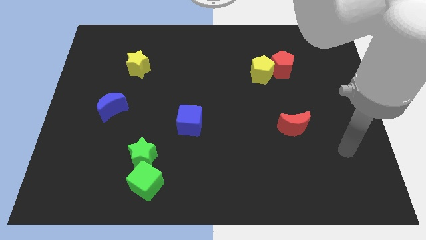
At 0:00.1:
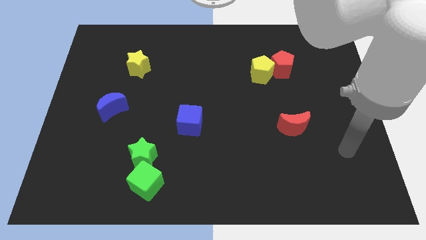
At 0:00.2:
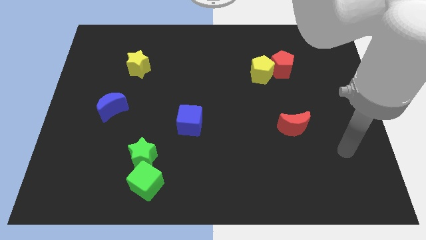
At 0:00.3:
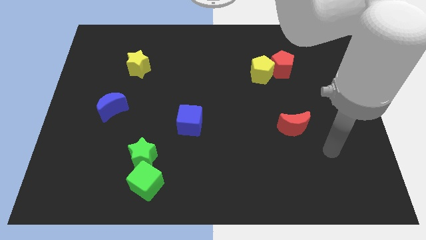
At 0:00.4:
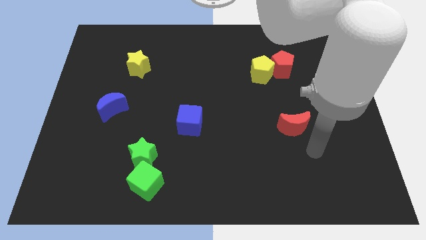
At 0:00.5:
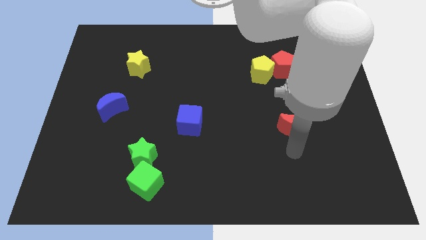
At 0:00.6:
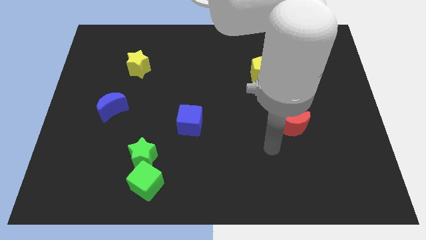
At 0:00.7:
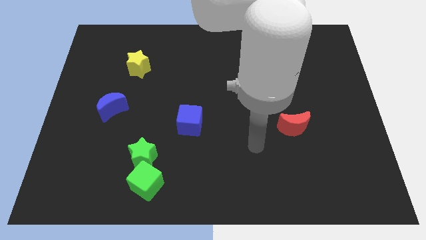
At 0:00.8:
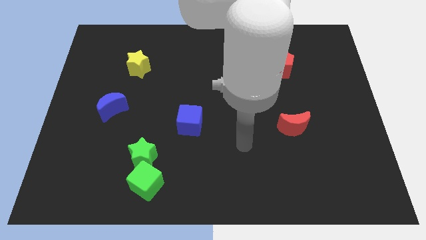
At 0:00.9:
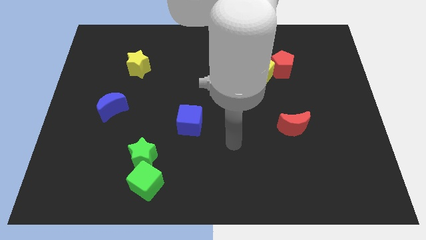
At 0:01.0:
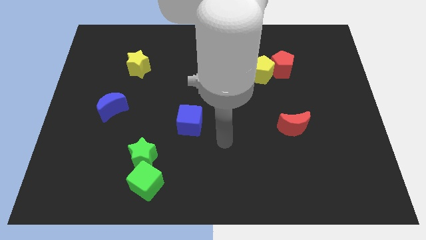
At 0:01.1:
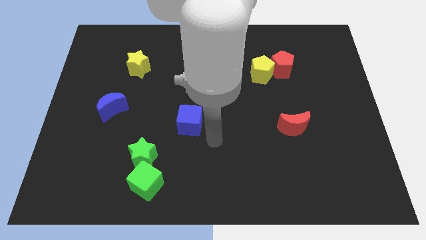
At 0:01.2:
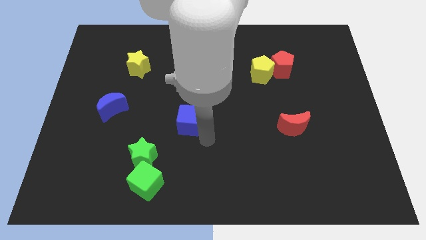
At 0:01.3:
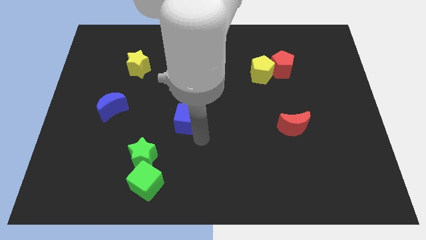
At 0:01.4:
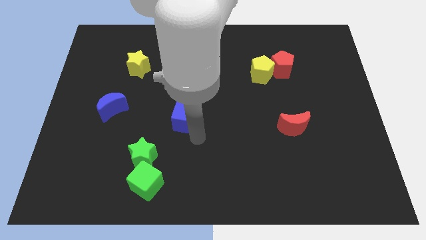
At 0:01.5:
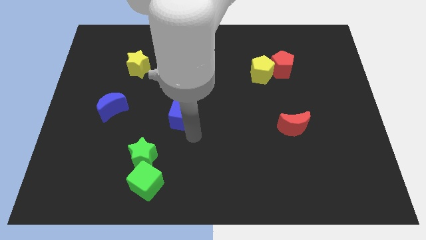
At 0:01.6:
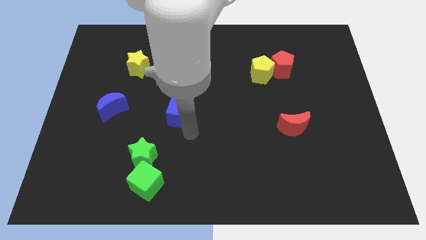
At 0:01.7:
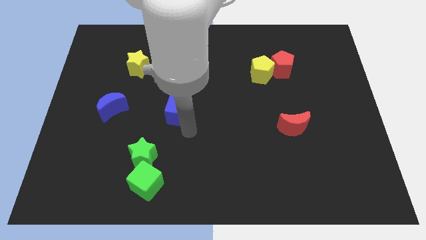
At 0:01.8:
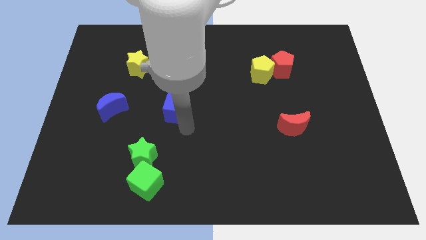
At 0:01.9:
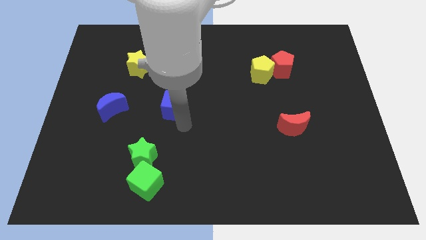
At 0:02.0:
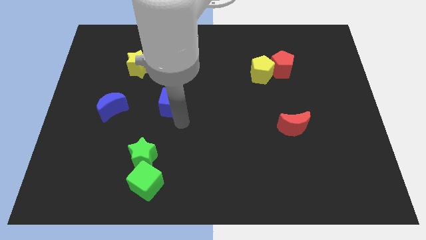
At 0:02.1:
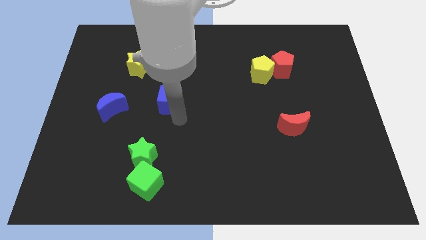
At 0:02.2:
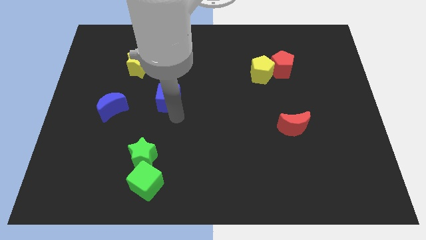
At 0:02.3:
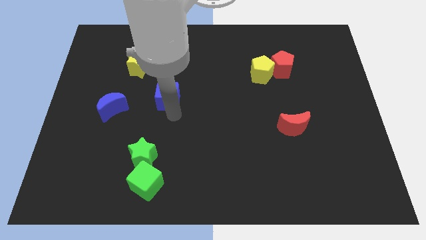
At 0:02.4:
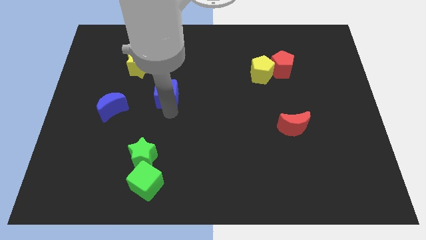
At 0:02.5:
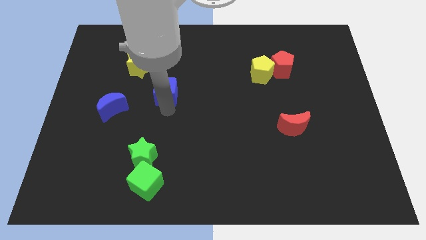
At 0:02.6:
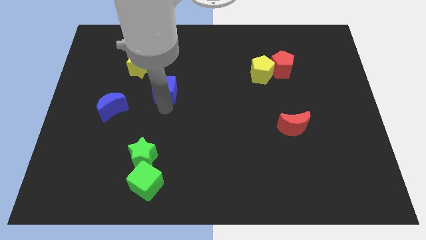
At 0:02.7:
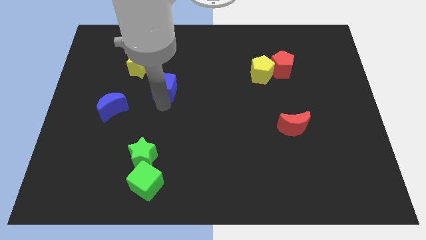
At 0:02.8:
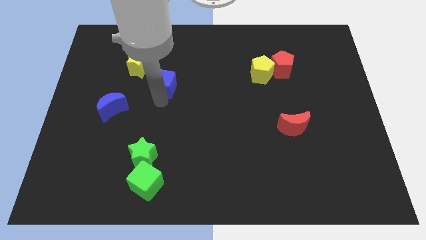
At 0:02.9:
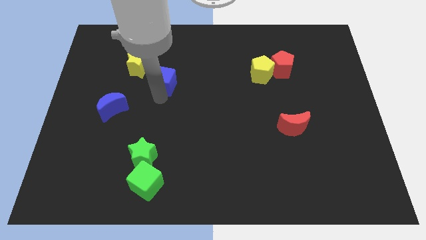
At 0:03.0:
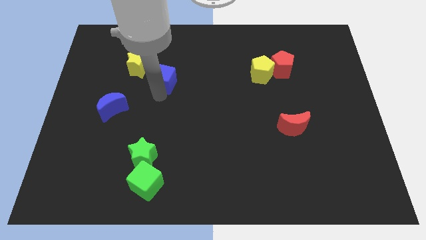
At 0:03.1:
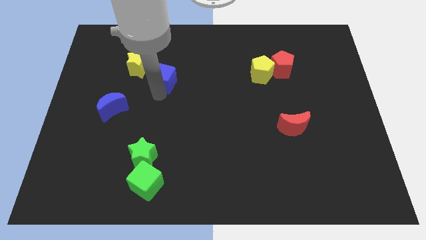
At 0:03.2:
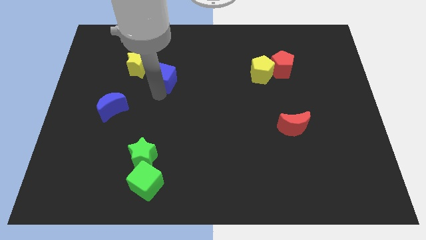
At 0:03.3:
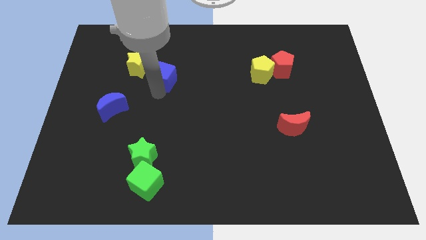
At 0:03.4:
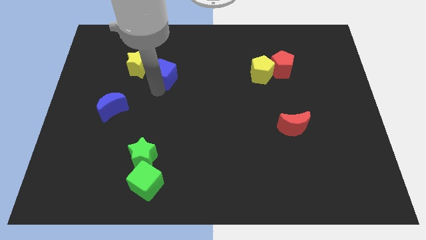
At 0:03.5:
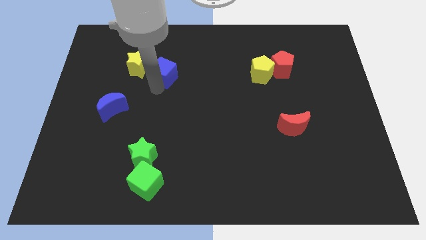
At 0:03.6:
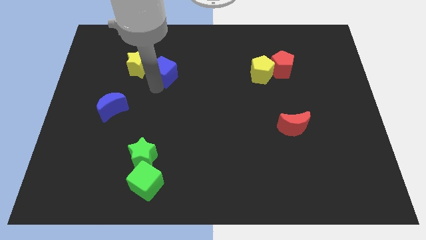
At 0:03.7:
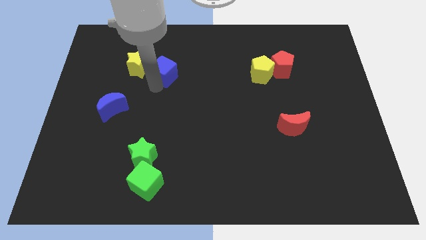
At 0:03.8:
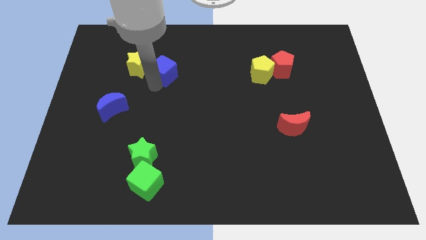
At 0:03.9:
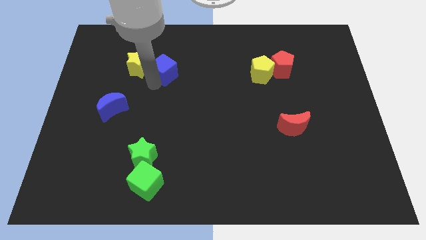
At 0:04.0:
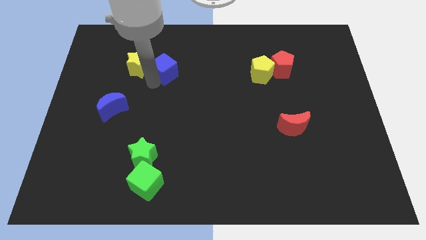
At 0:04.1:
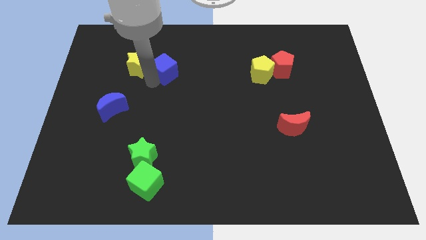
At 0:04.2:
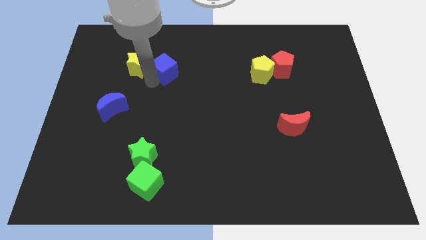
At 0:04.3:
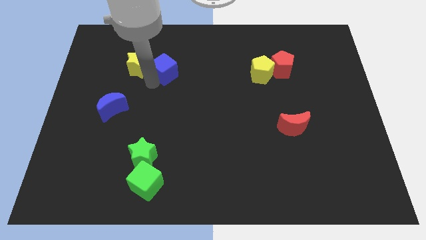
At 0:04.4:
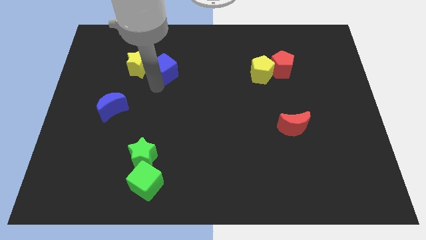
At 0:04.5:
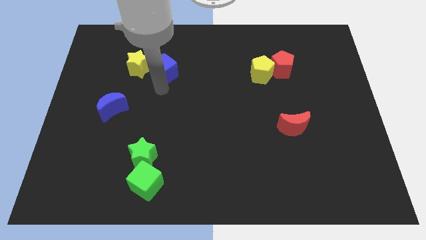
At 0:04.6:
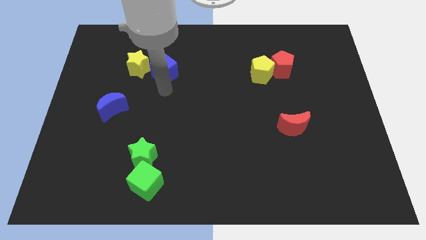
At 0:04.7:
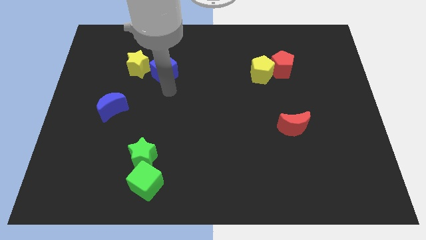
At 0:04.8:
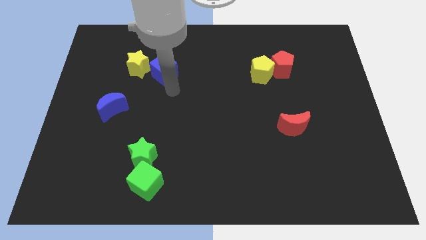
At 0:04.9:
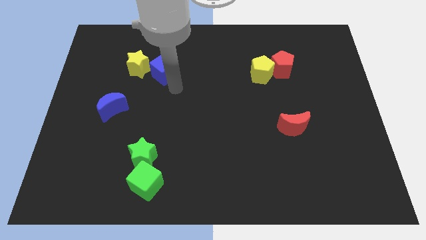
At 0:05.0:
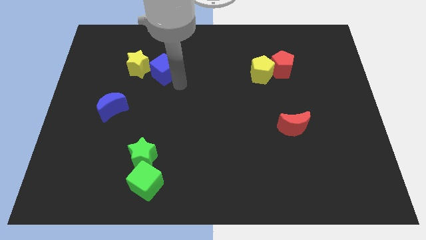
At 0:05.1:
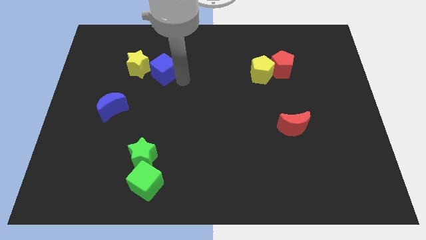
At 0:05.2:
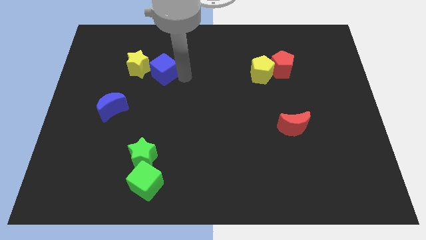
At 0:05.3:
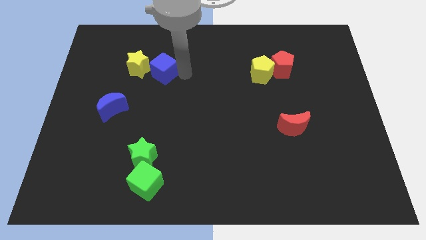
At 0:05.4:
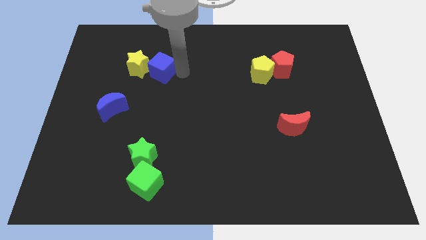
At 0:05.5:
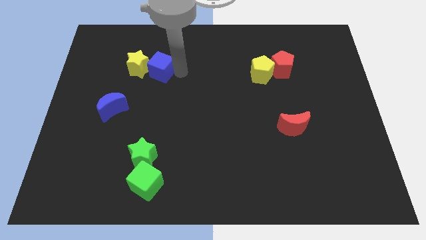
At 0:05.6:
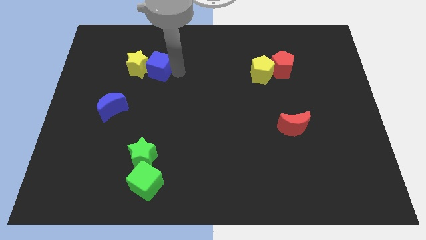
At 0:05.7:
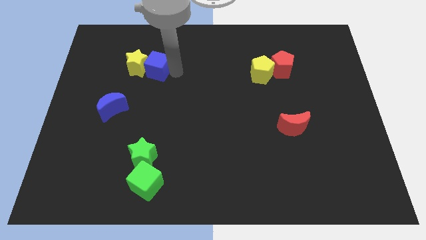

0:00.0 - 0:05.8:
put the blue cube close to the yellow star

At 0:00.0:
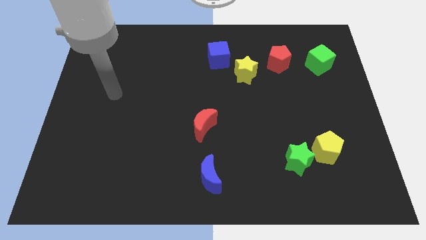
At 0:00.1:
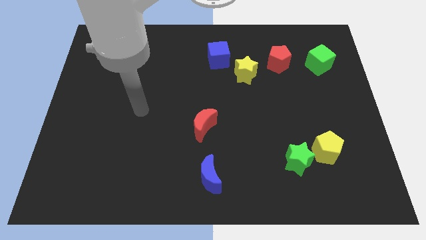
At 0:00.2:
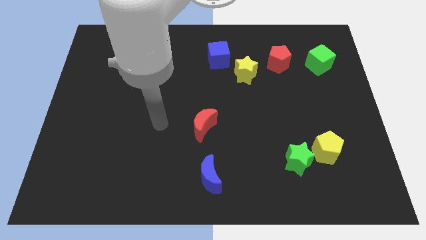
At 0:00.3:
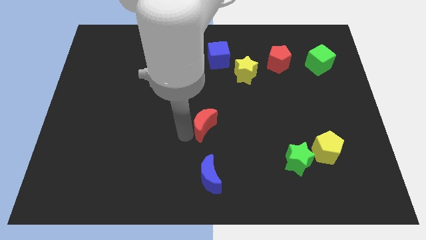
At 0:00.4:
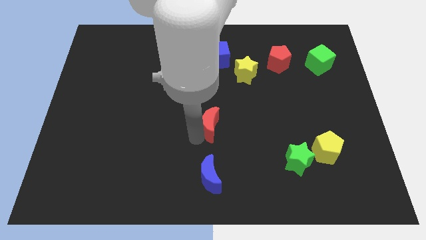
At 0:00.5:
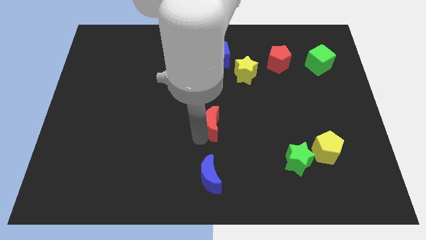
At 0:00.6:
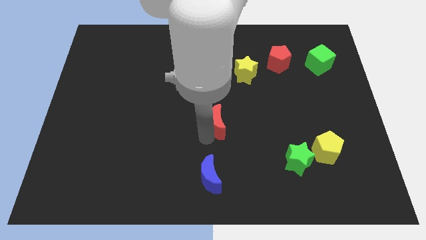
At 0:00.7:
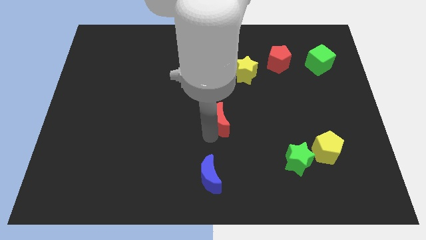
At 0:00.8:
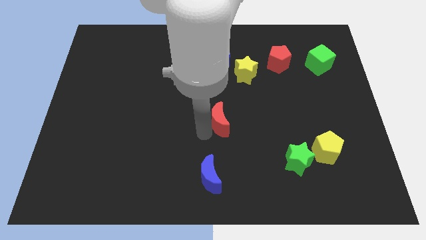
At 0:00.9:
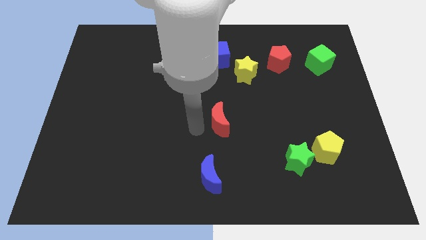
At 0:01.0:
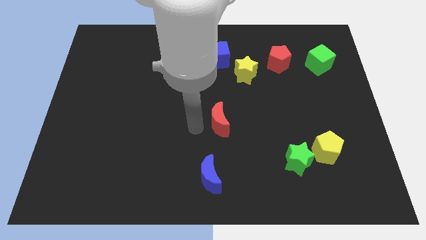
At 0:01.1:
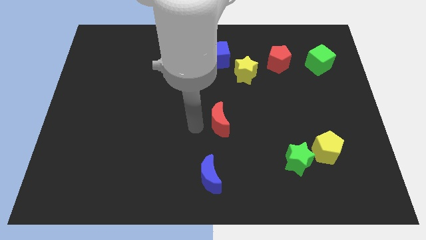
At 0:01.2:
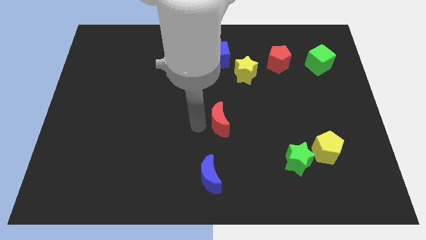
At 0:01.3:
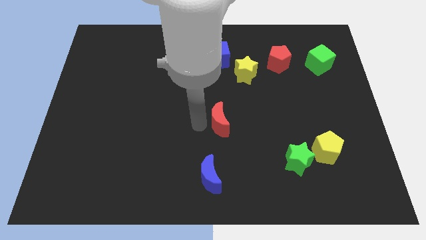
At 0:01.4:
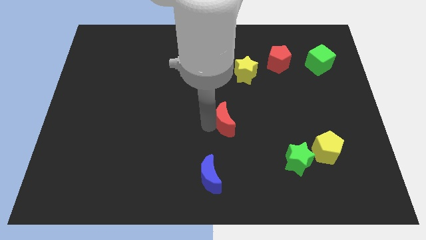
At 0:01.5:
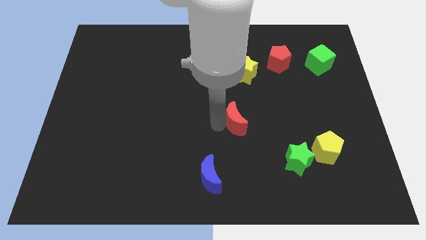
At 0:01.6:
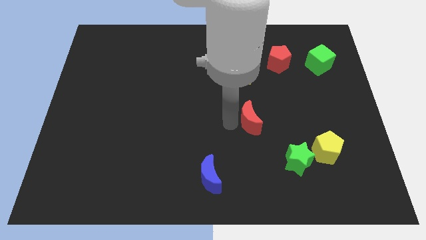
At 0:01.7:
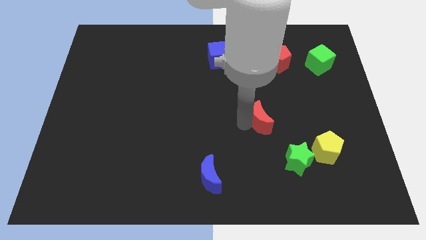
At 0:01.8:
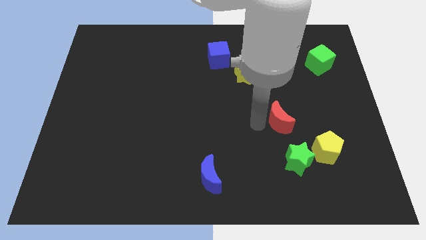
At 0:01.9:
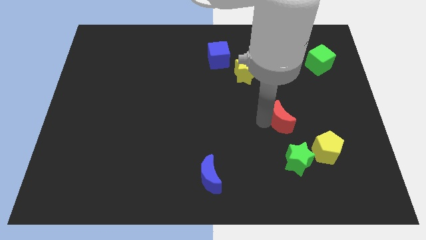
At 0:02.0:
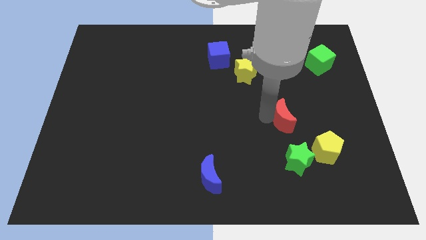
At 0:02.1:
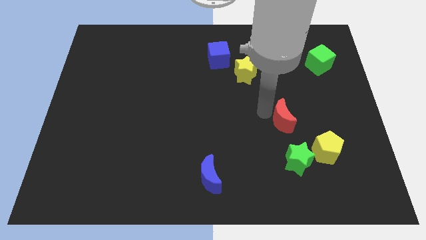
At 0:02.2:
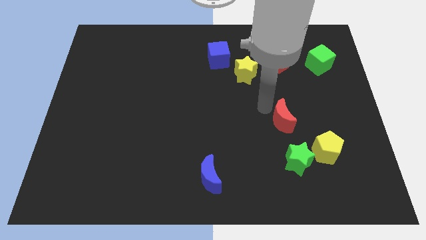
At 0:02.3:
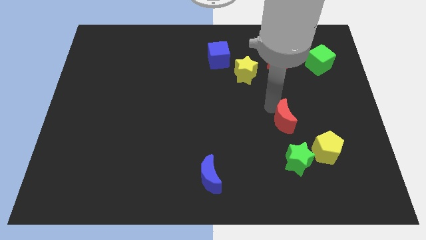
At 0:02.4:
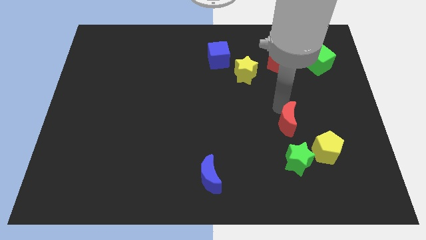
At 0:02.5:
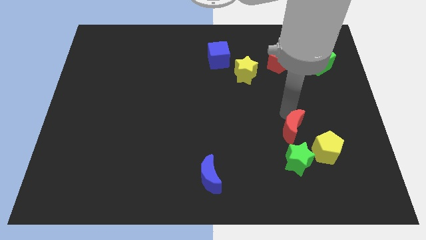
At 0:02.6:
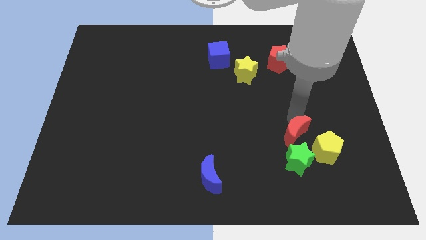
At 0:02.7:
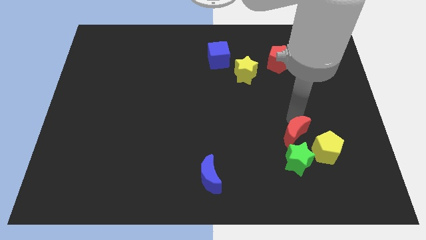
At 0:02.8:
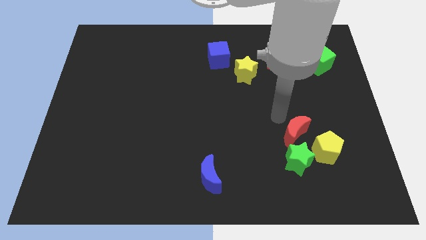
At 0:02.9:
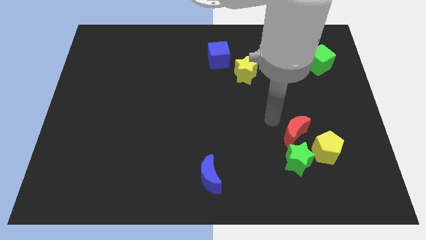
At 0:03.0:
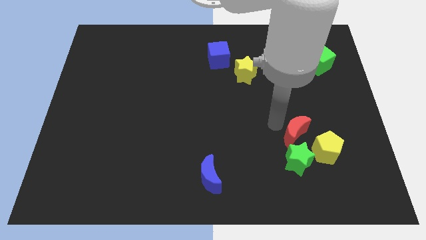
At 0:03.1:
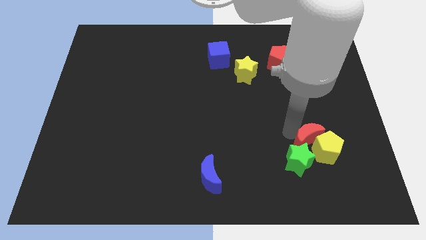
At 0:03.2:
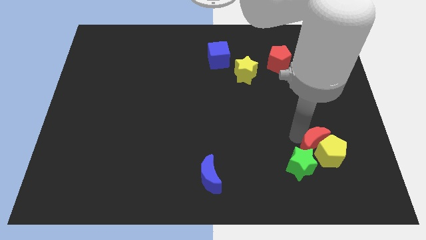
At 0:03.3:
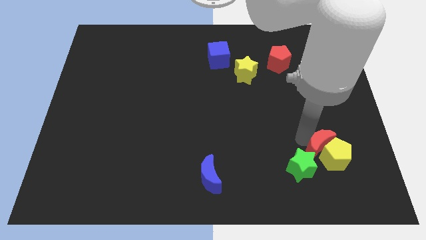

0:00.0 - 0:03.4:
slide the red moon towards the yellow pentagon
